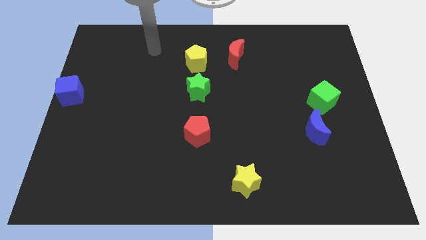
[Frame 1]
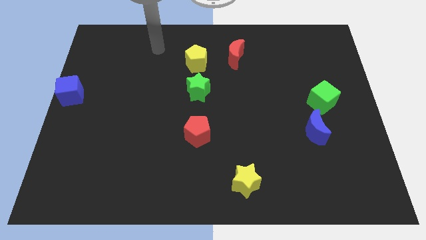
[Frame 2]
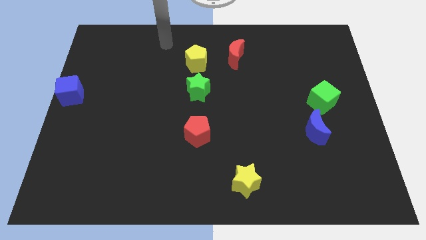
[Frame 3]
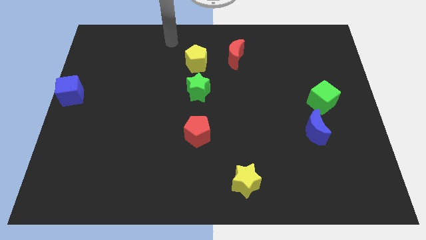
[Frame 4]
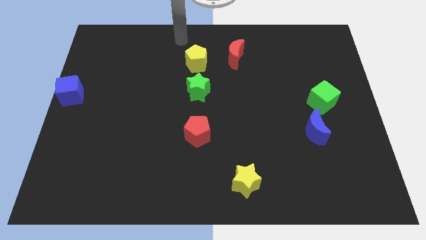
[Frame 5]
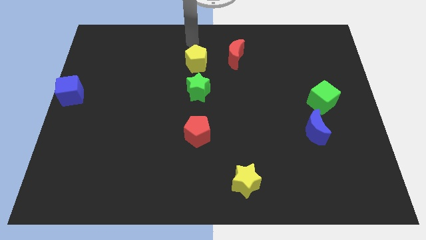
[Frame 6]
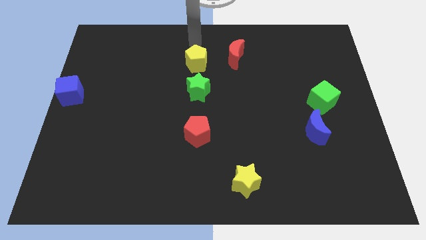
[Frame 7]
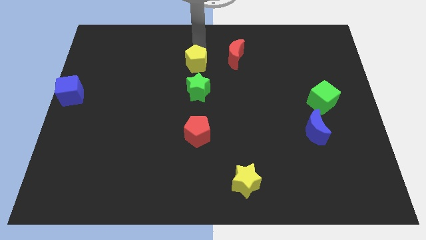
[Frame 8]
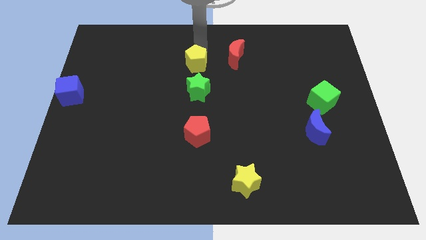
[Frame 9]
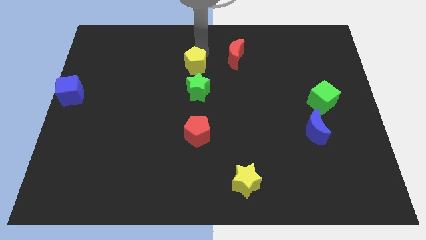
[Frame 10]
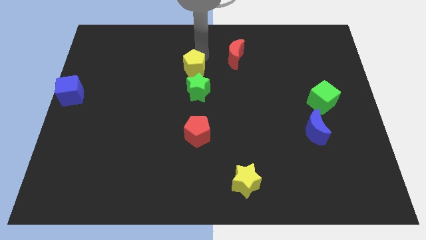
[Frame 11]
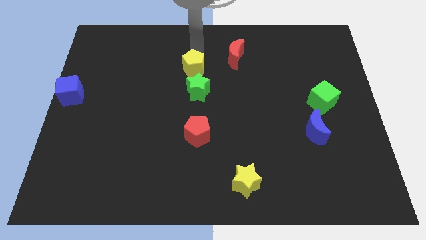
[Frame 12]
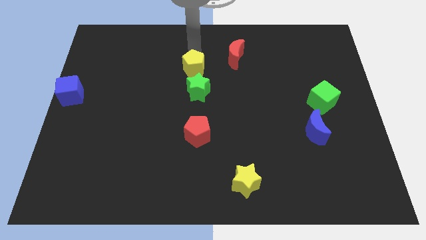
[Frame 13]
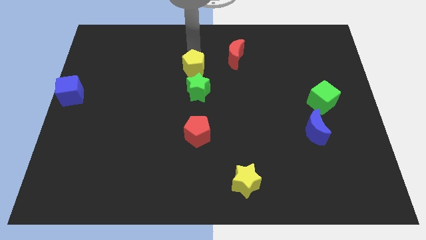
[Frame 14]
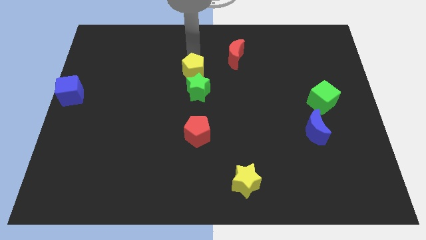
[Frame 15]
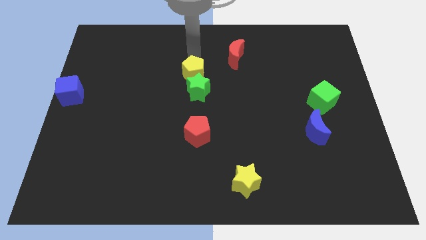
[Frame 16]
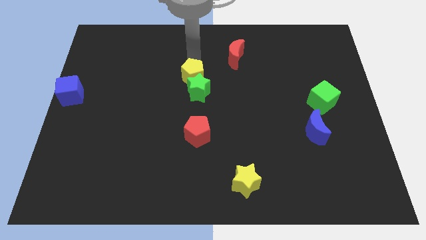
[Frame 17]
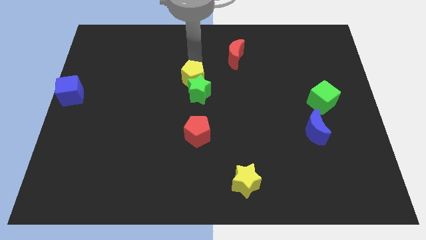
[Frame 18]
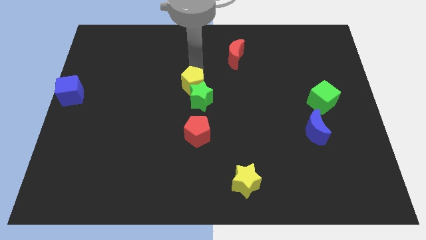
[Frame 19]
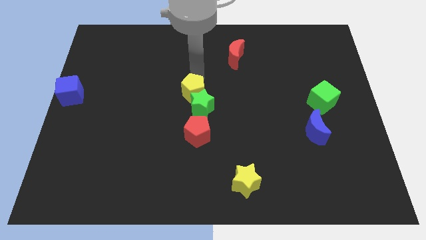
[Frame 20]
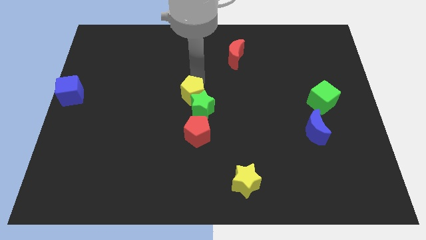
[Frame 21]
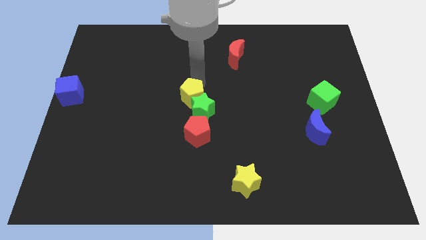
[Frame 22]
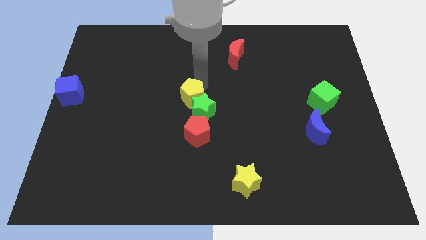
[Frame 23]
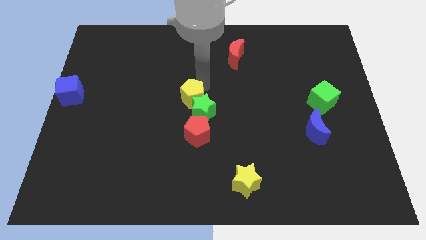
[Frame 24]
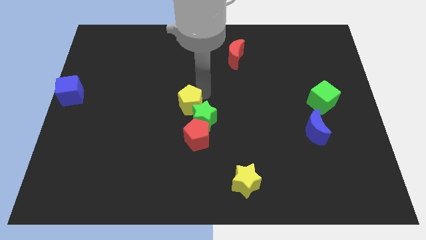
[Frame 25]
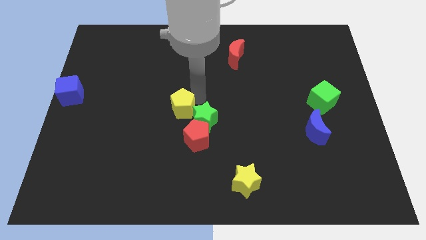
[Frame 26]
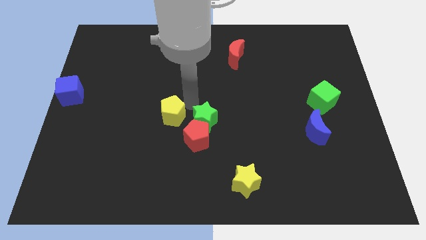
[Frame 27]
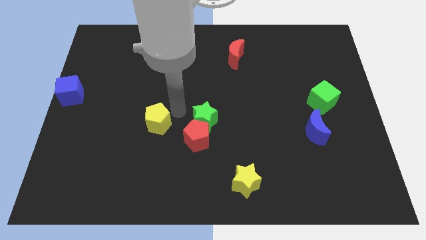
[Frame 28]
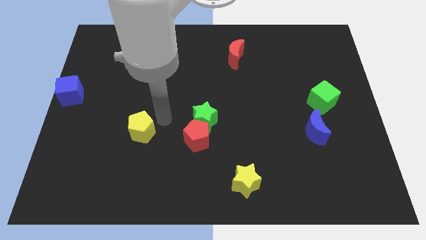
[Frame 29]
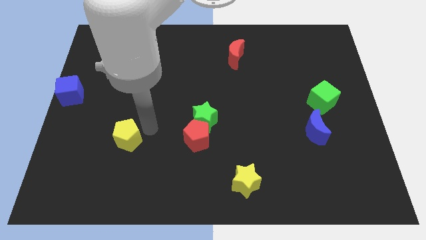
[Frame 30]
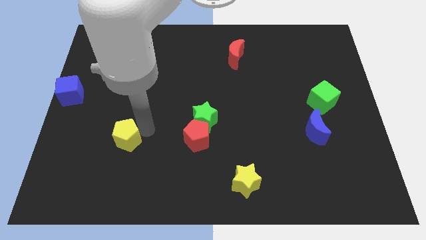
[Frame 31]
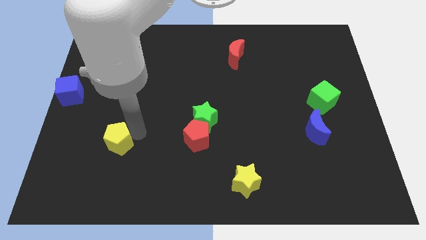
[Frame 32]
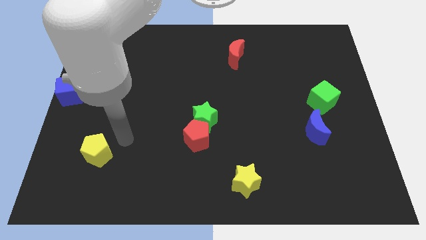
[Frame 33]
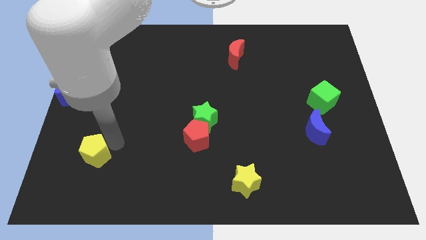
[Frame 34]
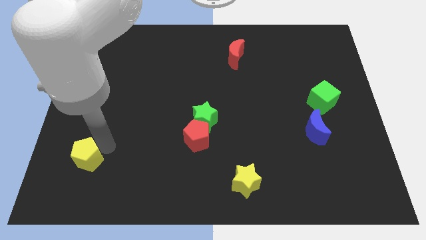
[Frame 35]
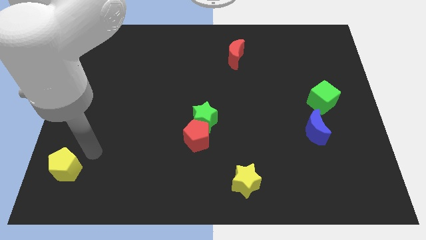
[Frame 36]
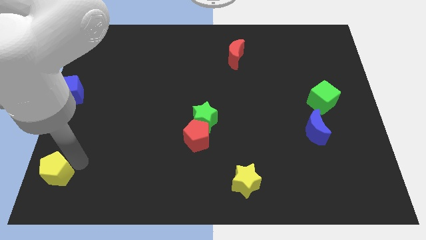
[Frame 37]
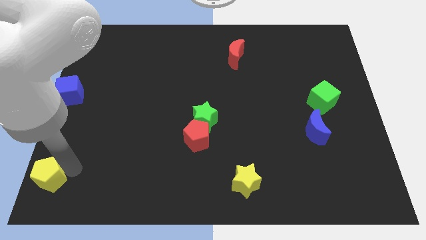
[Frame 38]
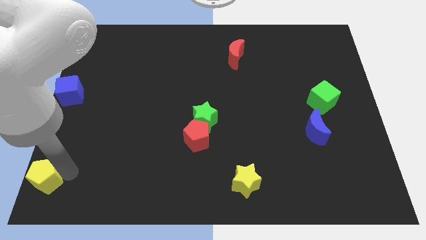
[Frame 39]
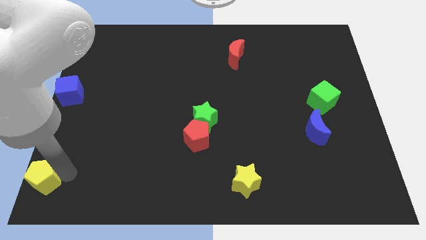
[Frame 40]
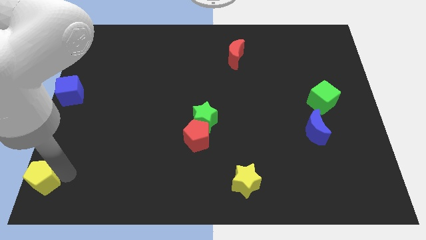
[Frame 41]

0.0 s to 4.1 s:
push the yellow pentagon into the green star
